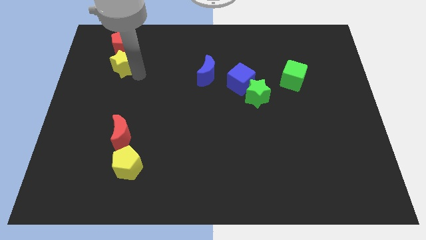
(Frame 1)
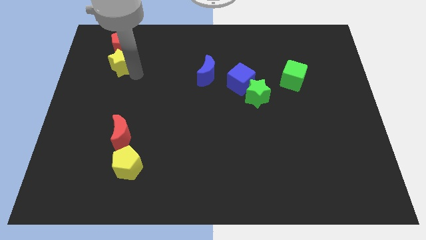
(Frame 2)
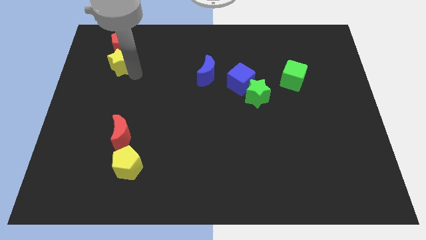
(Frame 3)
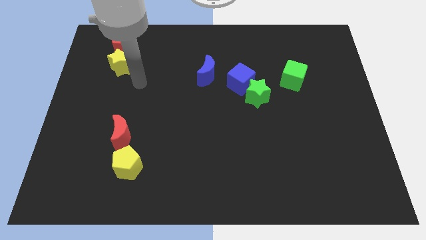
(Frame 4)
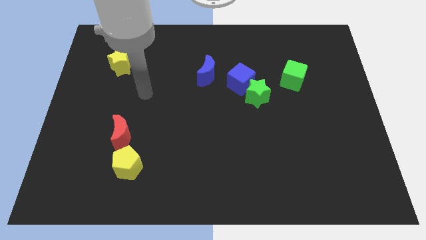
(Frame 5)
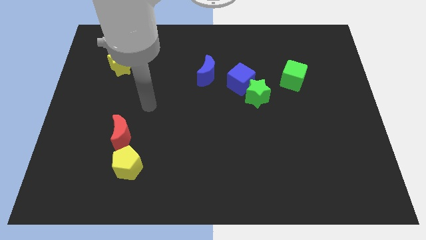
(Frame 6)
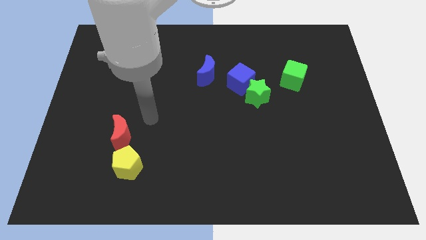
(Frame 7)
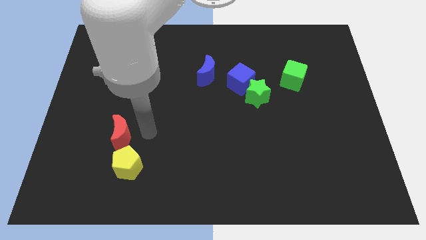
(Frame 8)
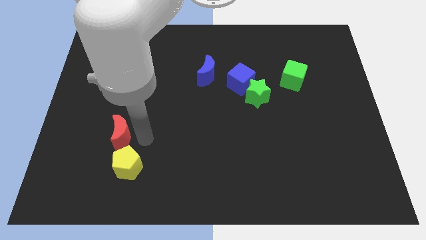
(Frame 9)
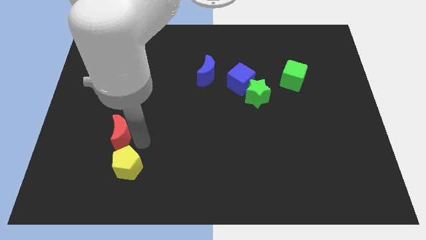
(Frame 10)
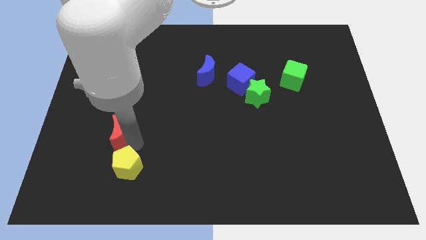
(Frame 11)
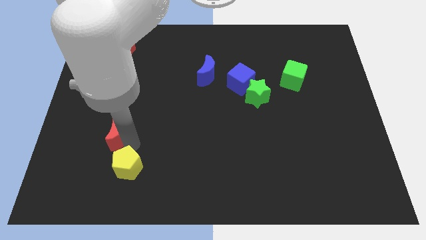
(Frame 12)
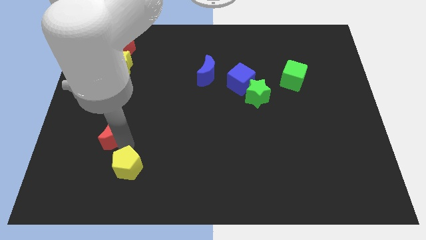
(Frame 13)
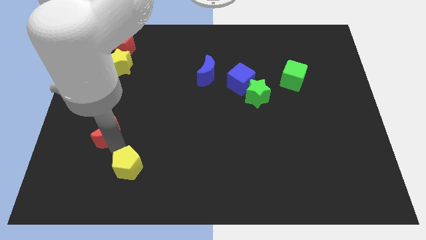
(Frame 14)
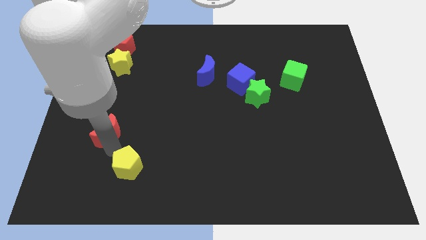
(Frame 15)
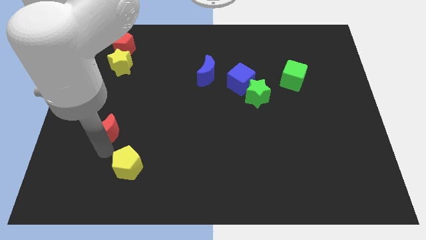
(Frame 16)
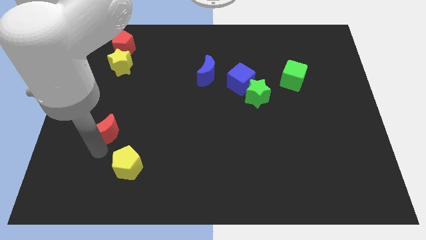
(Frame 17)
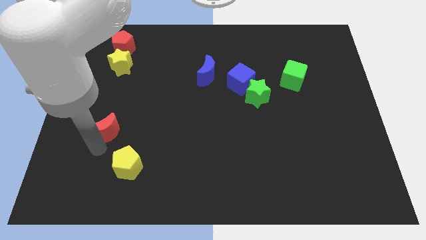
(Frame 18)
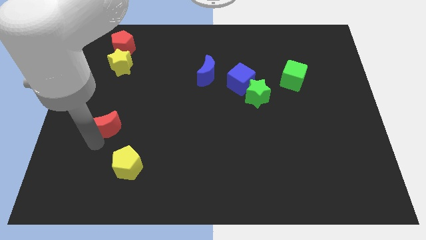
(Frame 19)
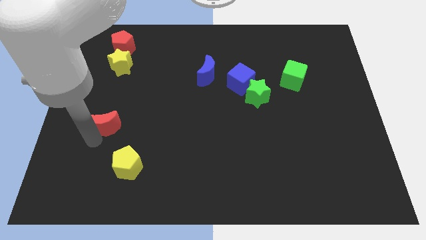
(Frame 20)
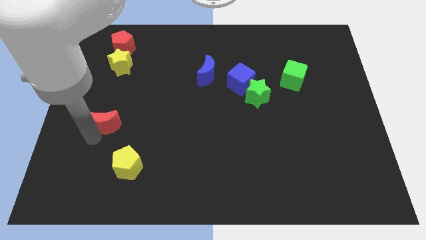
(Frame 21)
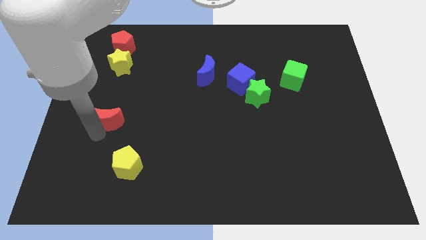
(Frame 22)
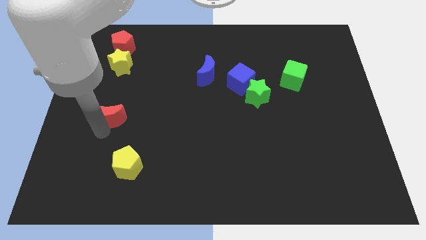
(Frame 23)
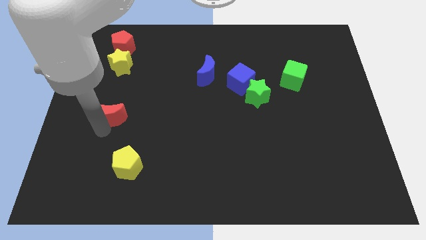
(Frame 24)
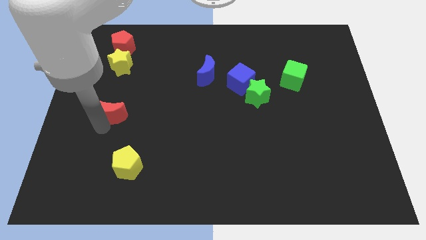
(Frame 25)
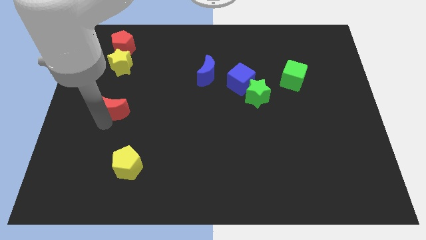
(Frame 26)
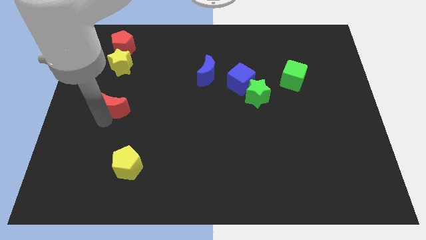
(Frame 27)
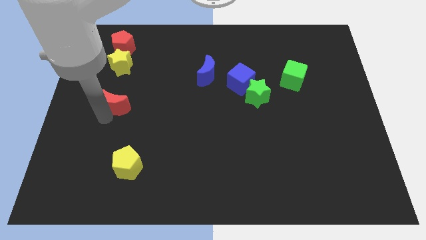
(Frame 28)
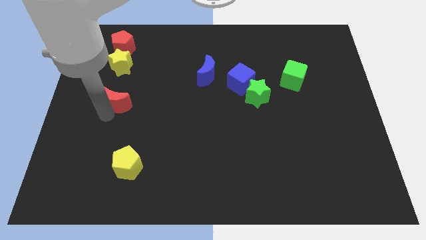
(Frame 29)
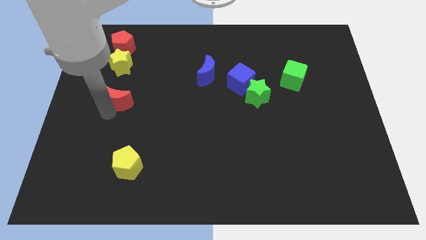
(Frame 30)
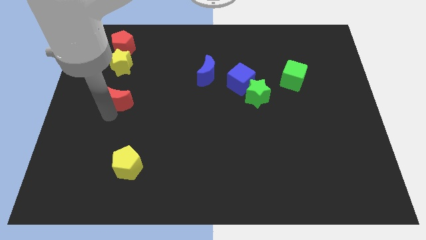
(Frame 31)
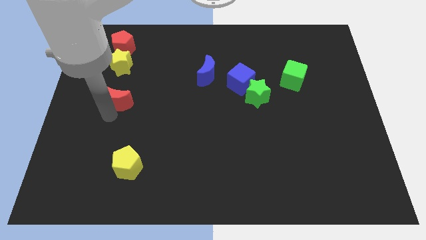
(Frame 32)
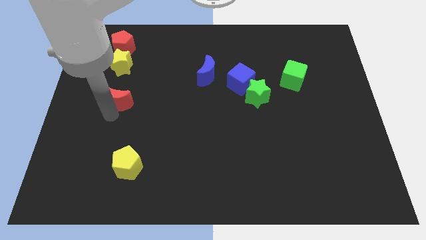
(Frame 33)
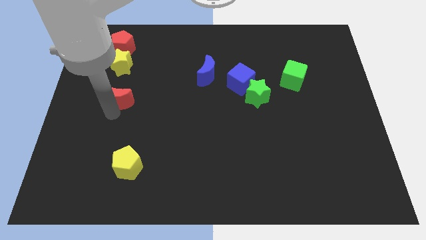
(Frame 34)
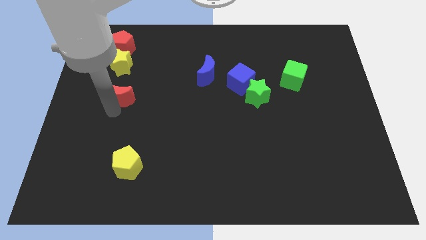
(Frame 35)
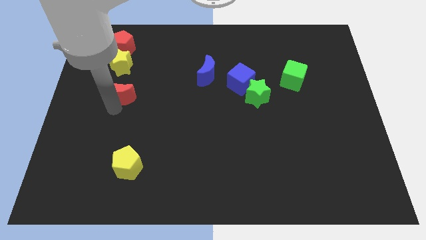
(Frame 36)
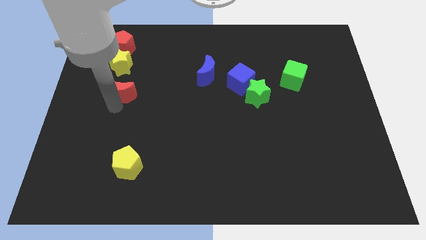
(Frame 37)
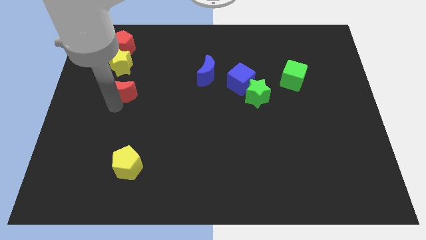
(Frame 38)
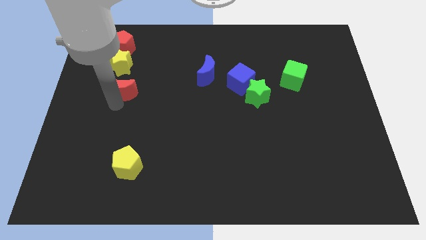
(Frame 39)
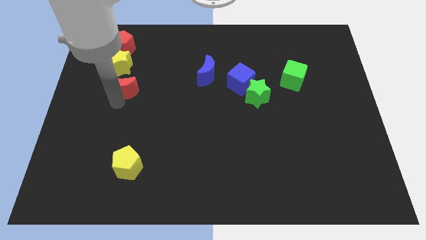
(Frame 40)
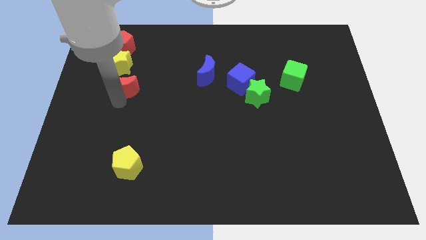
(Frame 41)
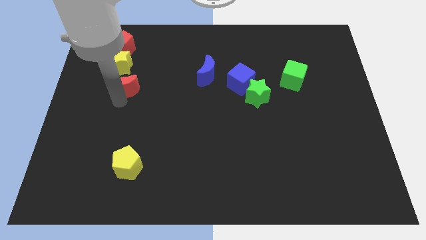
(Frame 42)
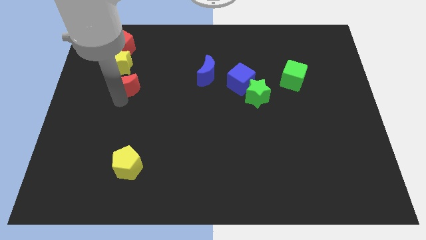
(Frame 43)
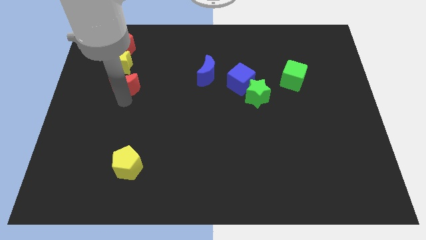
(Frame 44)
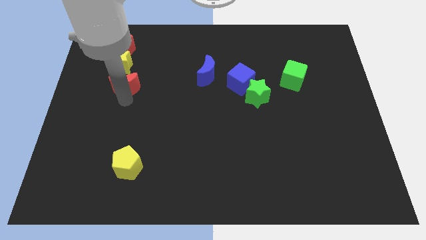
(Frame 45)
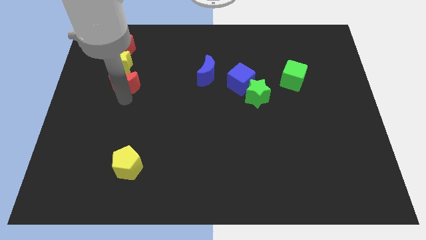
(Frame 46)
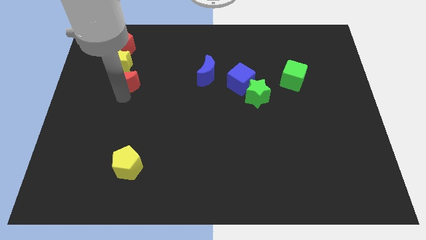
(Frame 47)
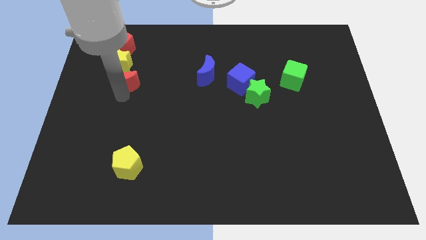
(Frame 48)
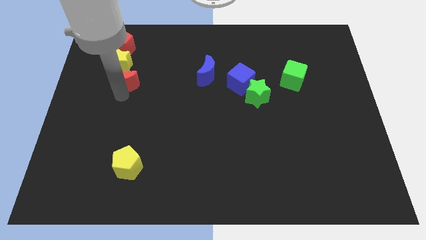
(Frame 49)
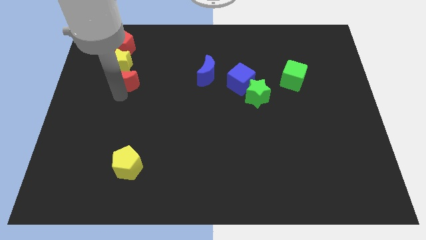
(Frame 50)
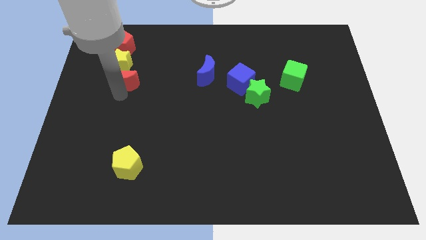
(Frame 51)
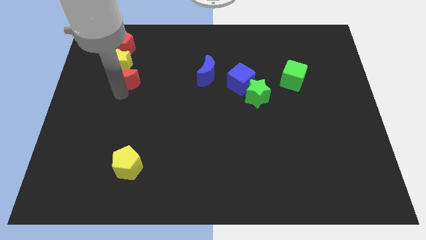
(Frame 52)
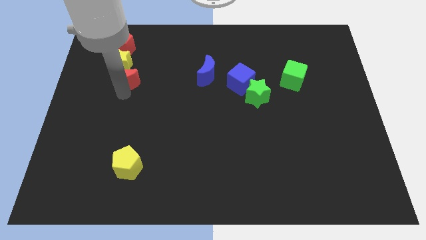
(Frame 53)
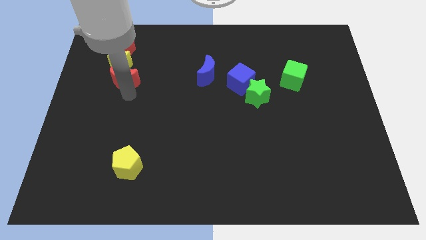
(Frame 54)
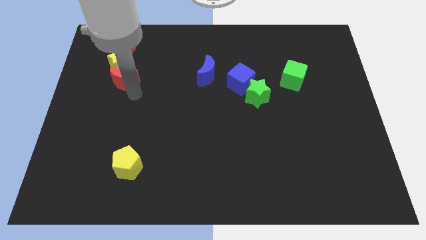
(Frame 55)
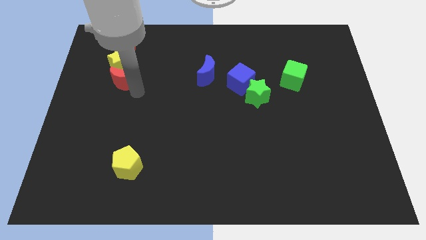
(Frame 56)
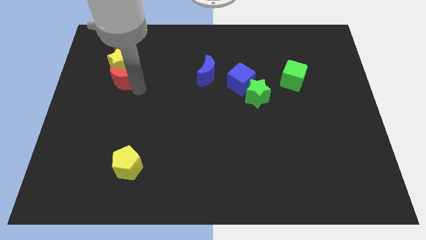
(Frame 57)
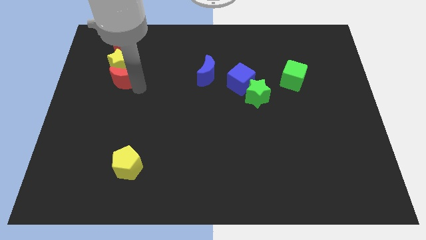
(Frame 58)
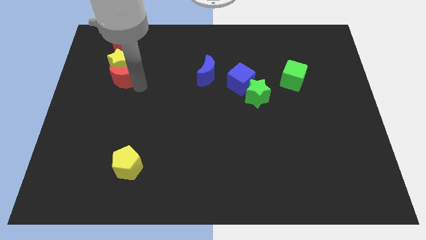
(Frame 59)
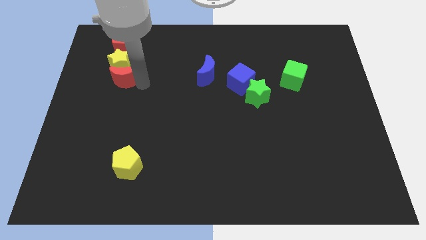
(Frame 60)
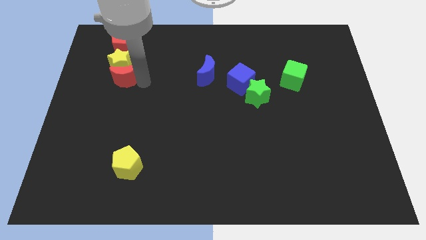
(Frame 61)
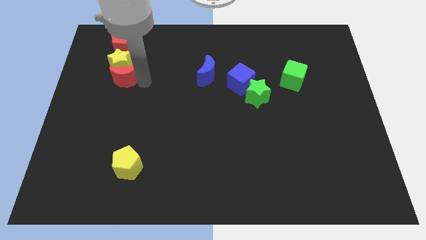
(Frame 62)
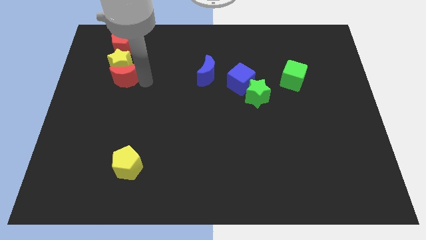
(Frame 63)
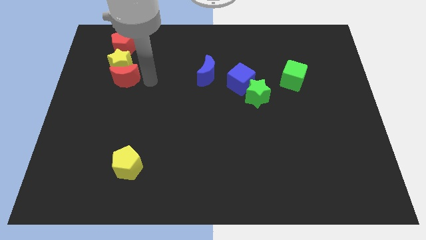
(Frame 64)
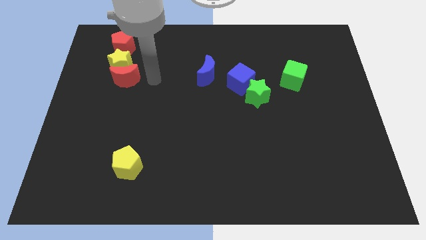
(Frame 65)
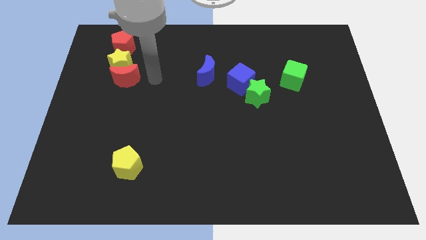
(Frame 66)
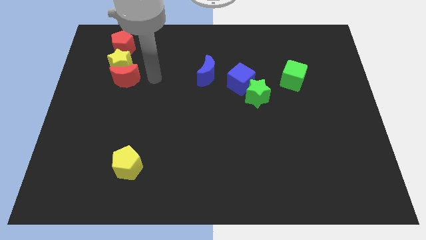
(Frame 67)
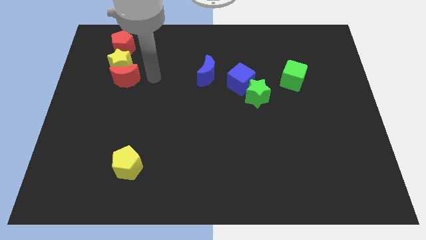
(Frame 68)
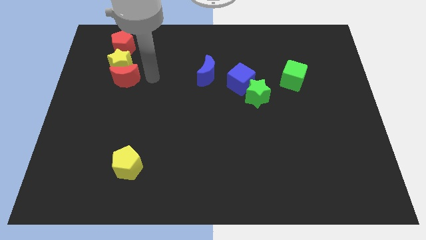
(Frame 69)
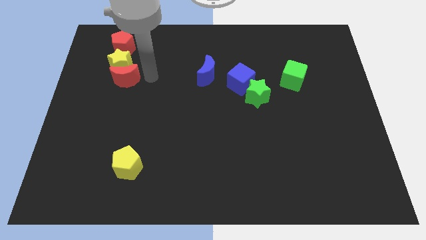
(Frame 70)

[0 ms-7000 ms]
move the red moon below the yellow star

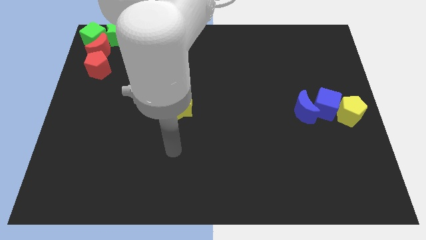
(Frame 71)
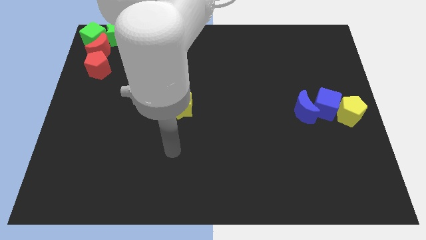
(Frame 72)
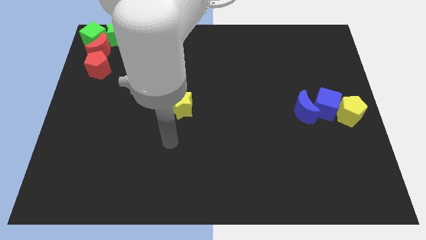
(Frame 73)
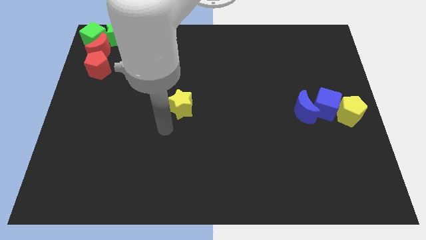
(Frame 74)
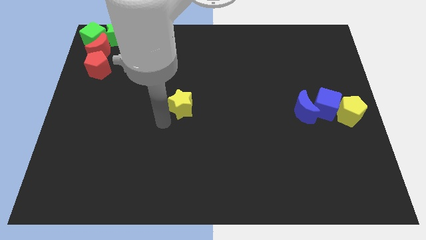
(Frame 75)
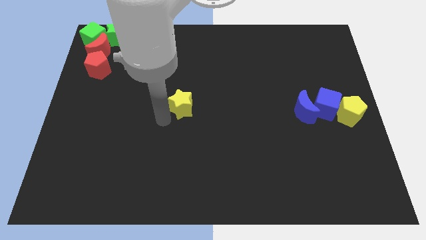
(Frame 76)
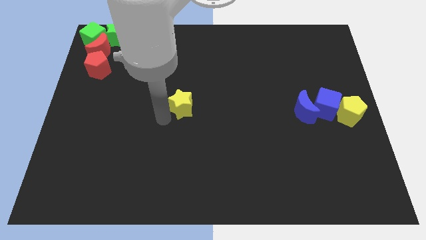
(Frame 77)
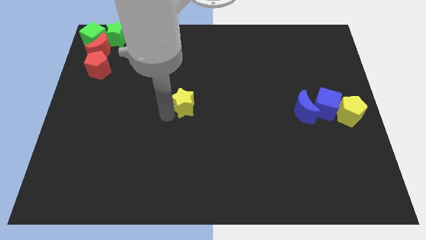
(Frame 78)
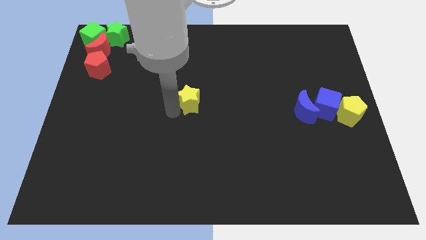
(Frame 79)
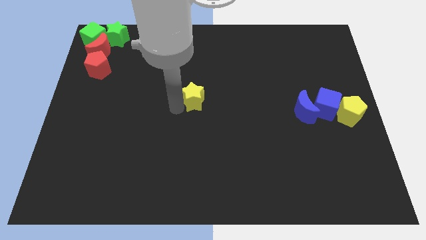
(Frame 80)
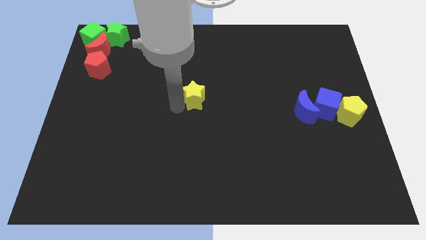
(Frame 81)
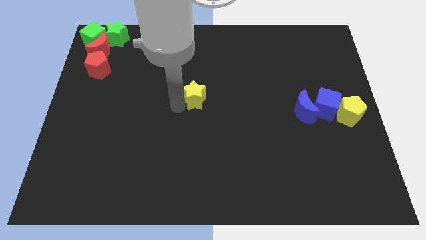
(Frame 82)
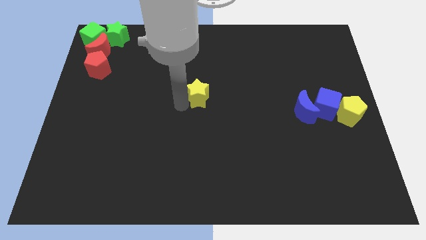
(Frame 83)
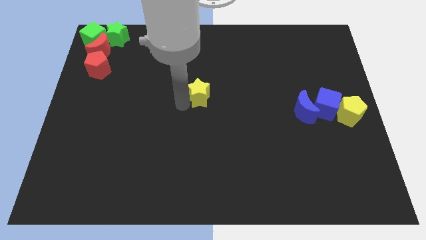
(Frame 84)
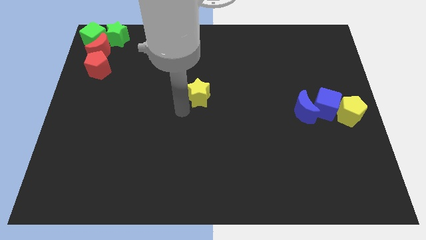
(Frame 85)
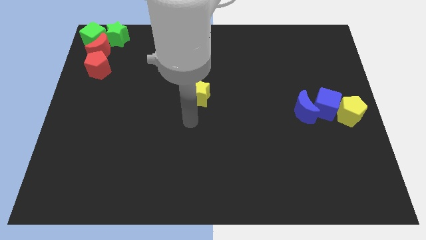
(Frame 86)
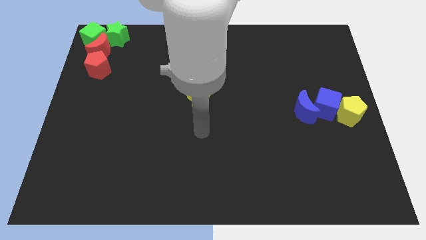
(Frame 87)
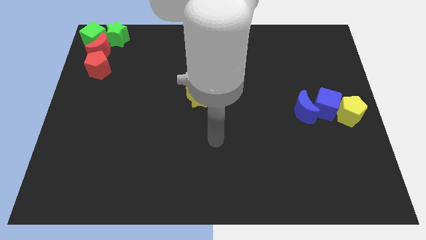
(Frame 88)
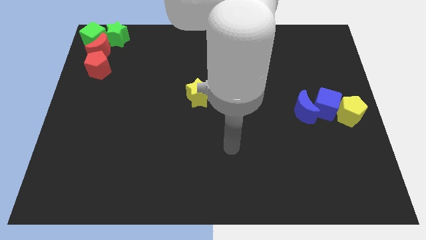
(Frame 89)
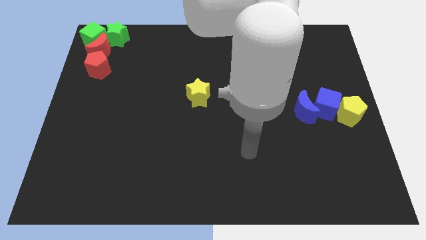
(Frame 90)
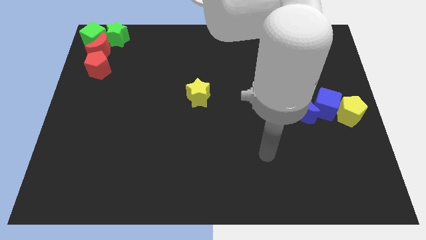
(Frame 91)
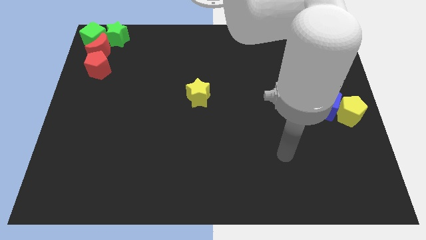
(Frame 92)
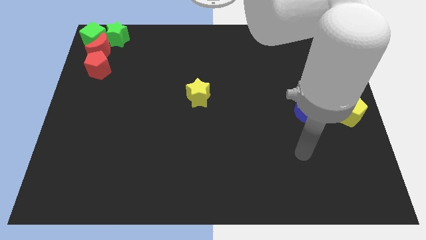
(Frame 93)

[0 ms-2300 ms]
push the yellow star towards the center of the board
